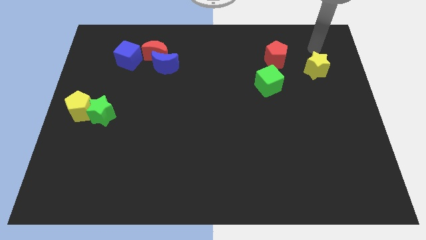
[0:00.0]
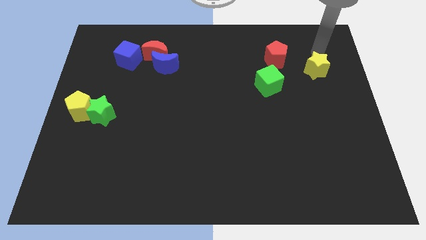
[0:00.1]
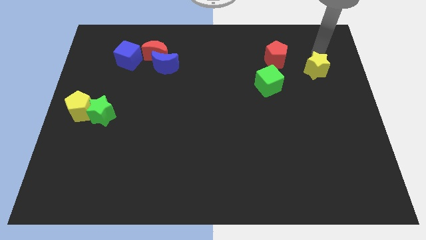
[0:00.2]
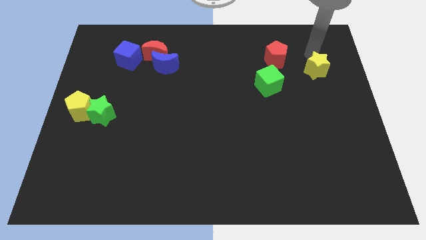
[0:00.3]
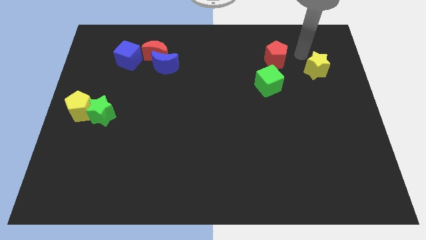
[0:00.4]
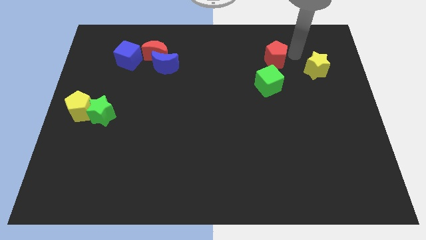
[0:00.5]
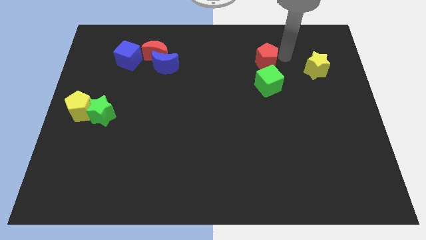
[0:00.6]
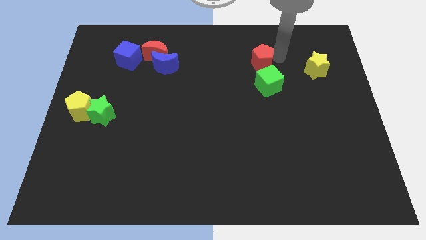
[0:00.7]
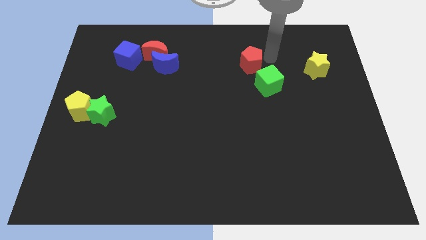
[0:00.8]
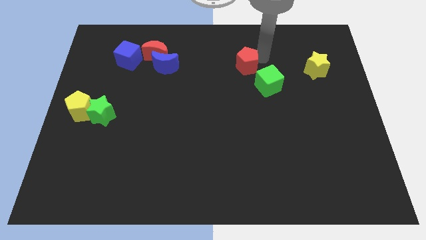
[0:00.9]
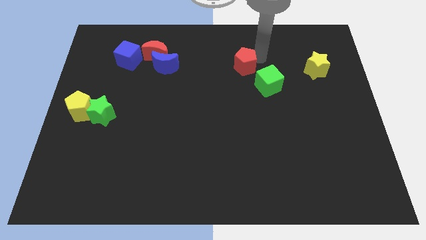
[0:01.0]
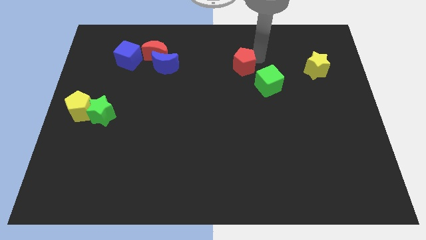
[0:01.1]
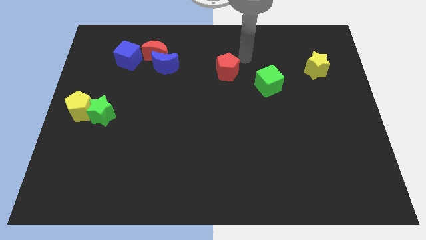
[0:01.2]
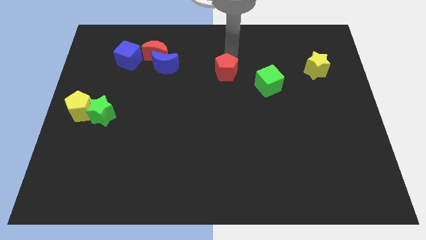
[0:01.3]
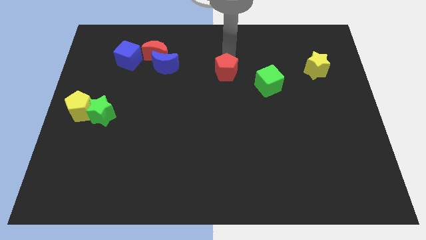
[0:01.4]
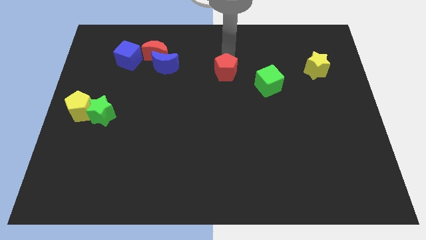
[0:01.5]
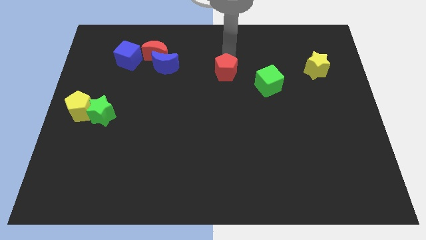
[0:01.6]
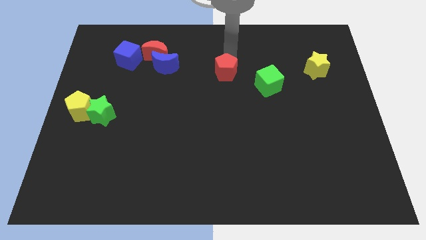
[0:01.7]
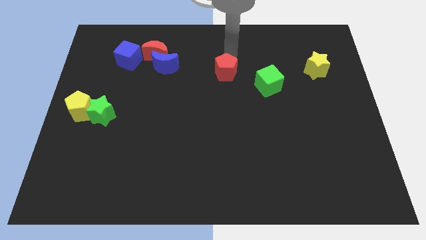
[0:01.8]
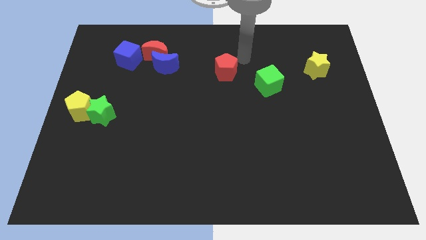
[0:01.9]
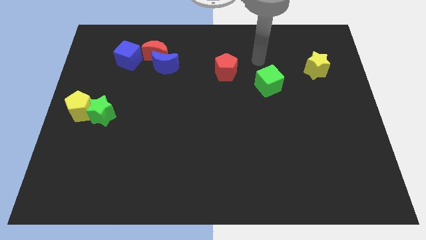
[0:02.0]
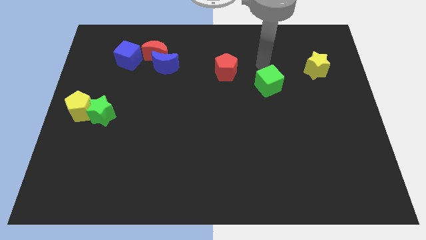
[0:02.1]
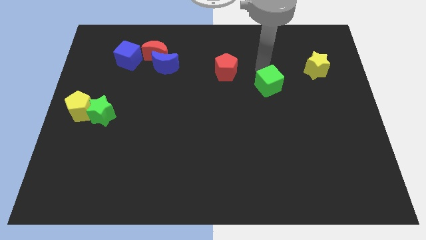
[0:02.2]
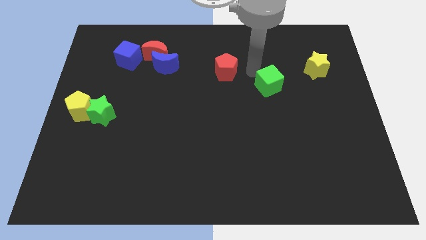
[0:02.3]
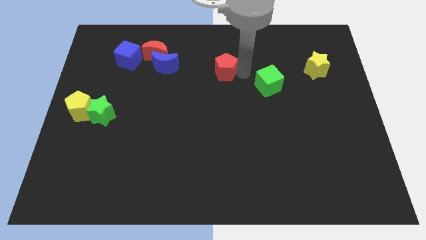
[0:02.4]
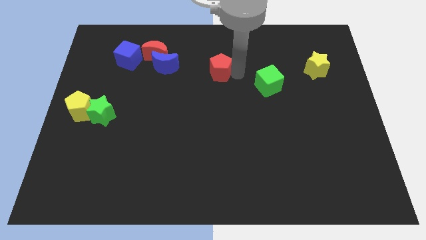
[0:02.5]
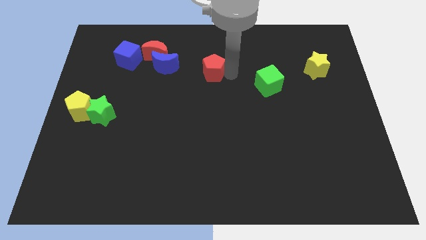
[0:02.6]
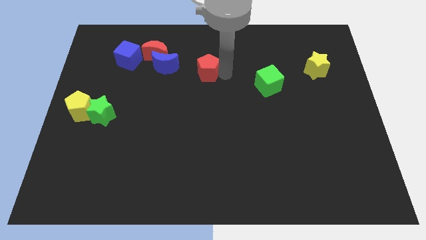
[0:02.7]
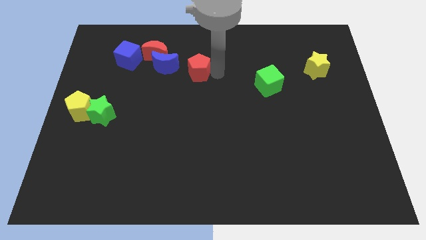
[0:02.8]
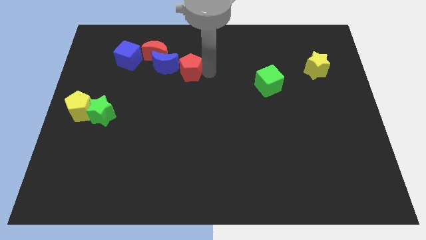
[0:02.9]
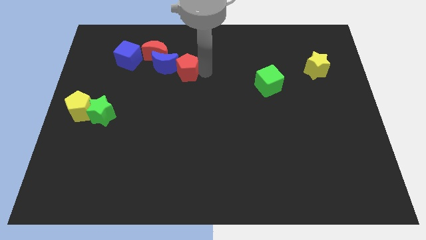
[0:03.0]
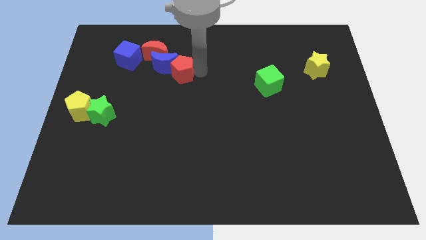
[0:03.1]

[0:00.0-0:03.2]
move red pentagon towards blue crescent

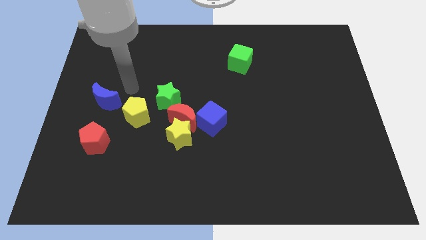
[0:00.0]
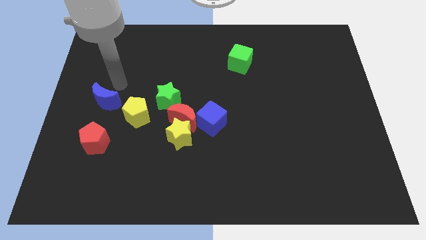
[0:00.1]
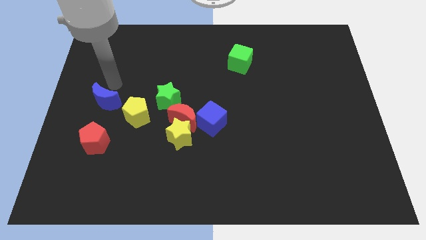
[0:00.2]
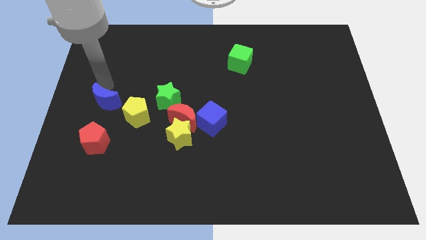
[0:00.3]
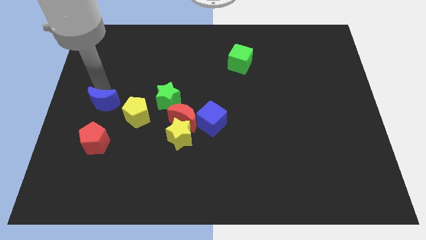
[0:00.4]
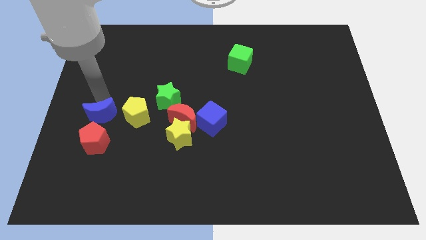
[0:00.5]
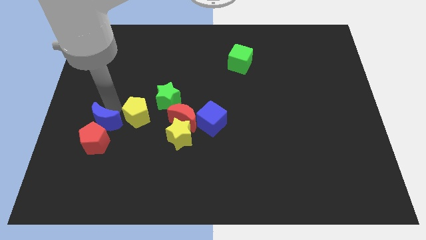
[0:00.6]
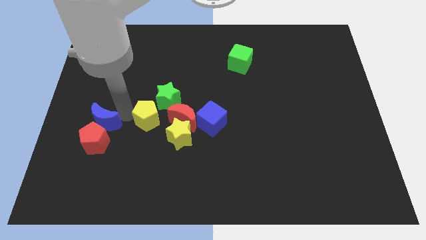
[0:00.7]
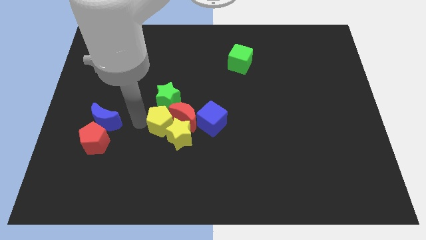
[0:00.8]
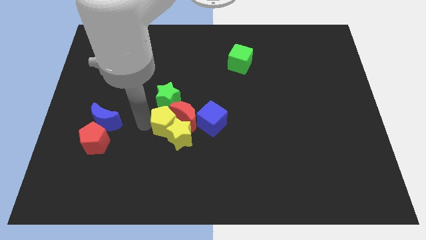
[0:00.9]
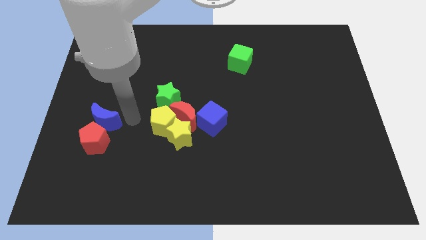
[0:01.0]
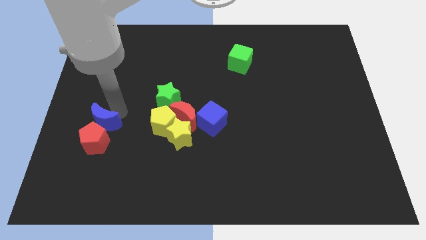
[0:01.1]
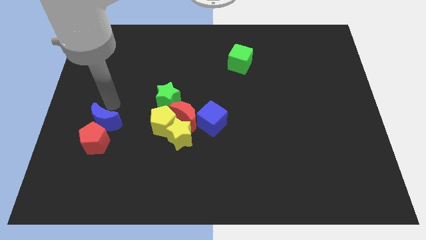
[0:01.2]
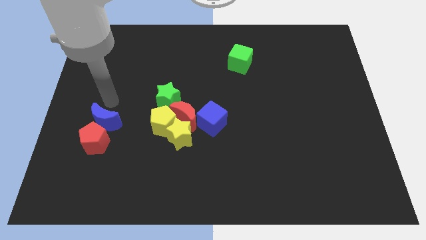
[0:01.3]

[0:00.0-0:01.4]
push the yellow pentagon into the yellow star

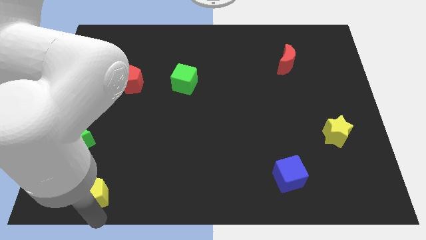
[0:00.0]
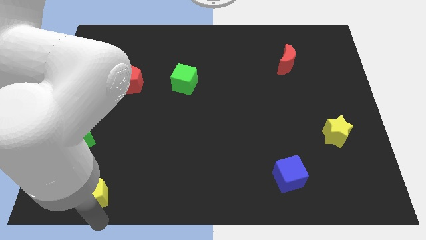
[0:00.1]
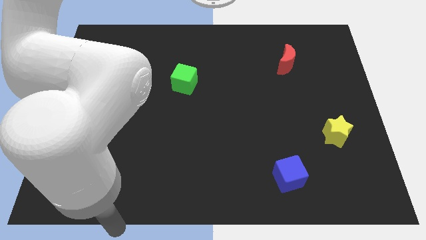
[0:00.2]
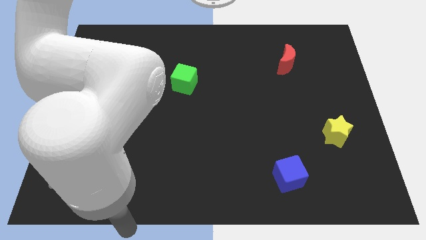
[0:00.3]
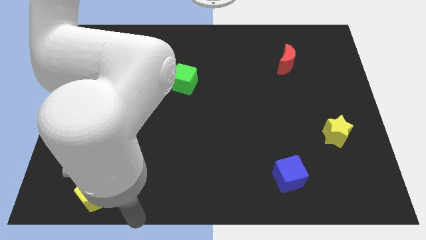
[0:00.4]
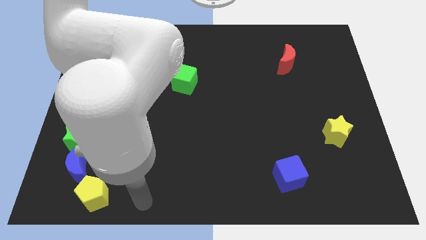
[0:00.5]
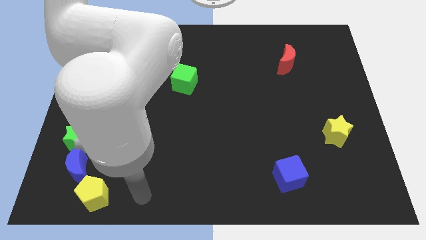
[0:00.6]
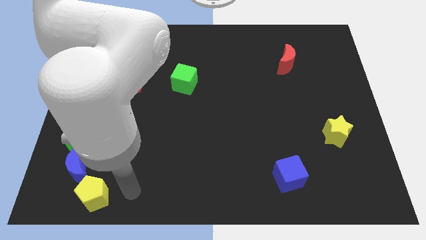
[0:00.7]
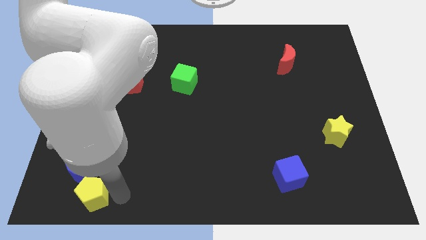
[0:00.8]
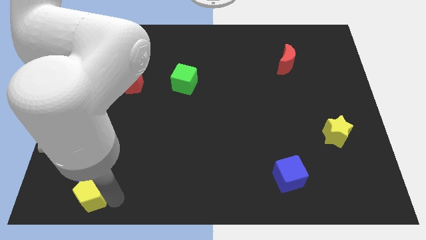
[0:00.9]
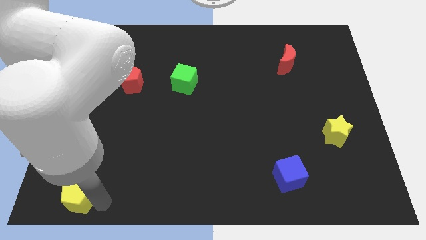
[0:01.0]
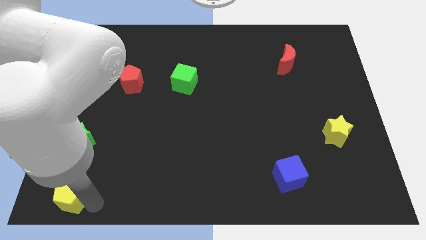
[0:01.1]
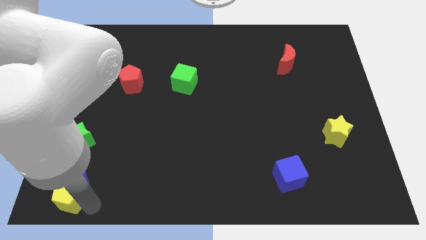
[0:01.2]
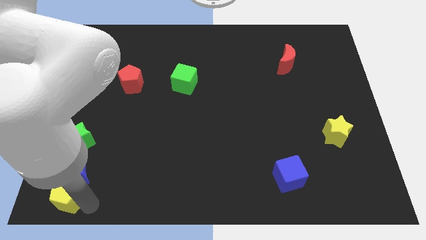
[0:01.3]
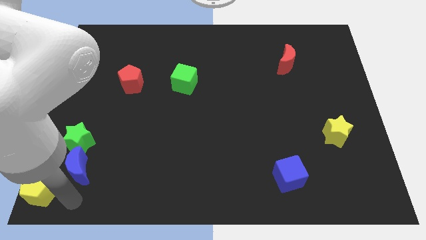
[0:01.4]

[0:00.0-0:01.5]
move the yellow pentagon below the blue crescent

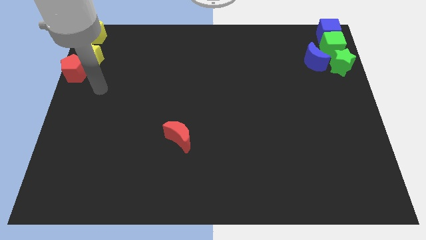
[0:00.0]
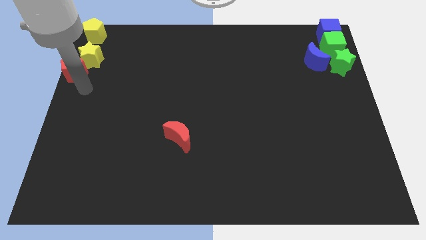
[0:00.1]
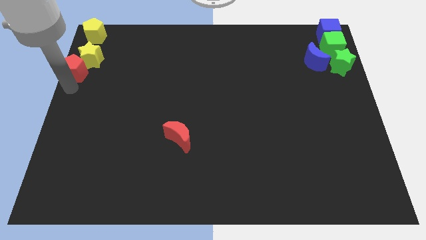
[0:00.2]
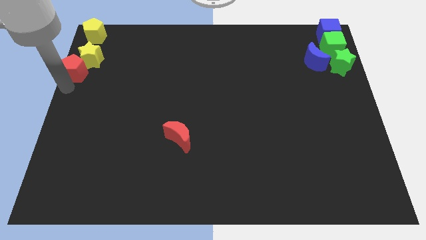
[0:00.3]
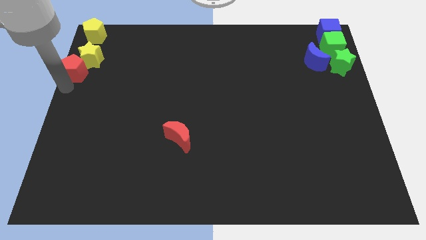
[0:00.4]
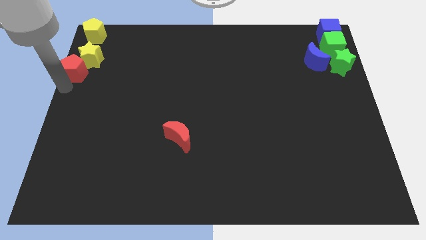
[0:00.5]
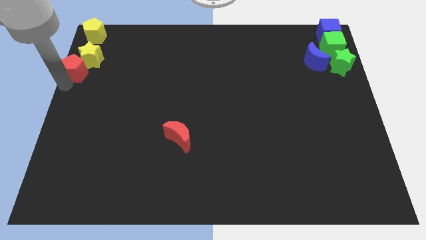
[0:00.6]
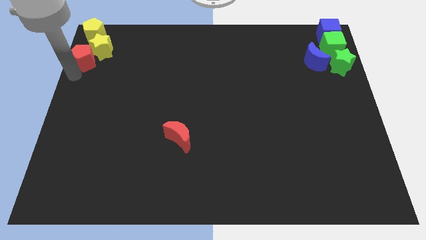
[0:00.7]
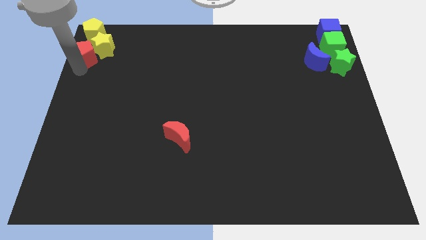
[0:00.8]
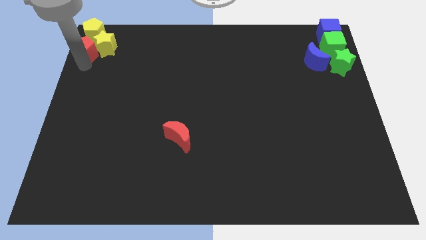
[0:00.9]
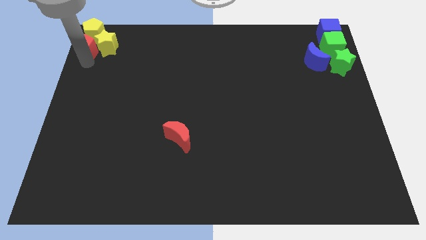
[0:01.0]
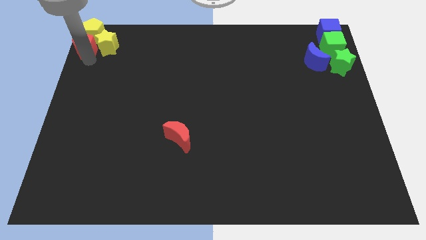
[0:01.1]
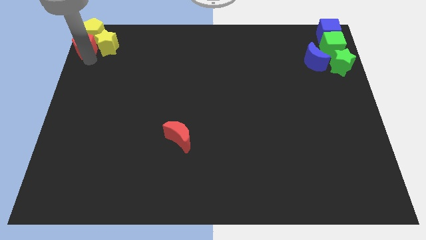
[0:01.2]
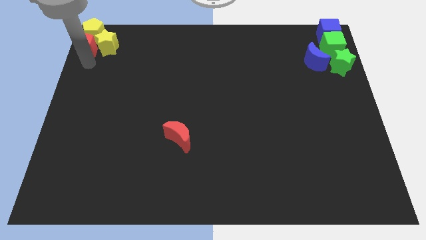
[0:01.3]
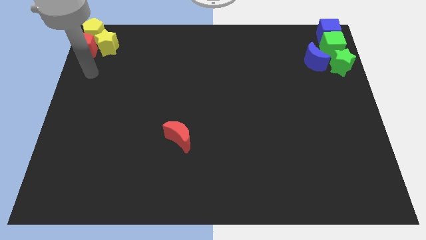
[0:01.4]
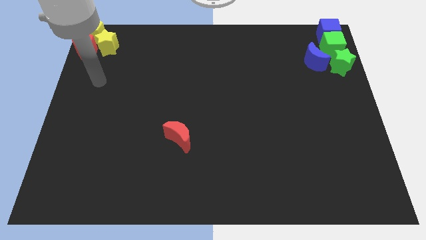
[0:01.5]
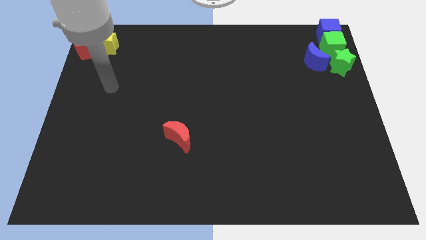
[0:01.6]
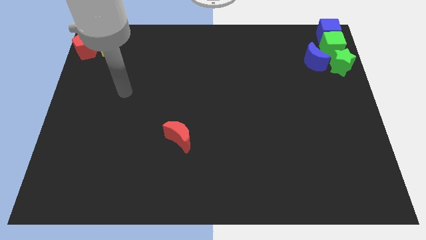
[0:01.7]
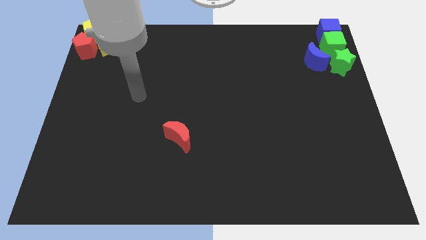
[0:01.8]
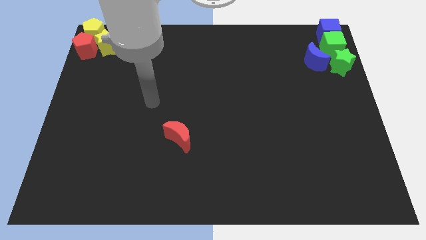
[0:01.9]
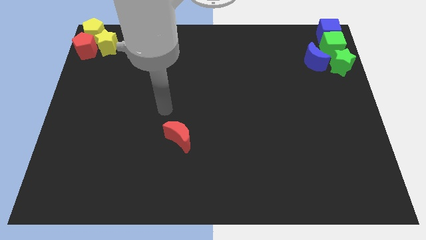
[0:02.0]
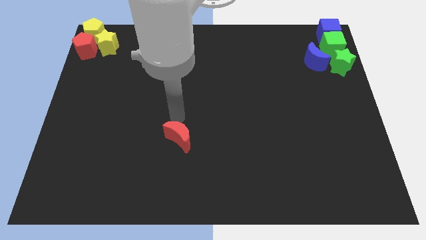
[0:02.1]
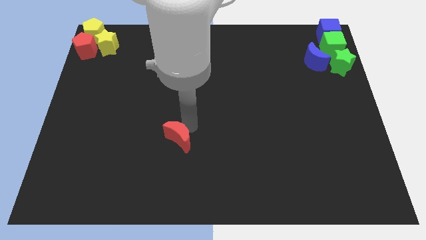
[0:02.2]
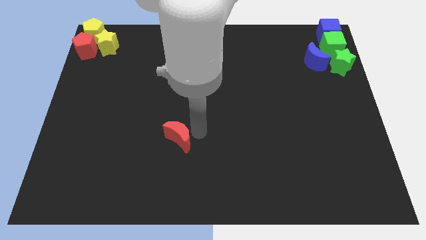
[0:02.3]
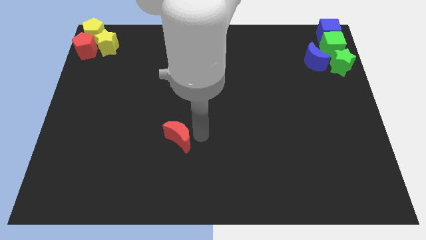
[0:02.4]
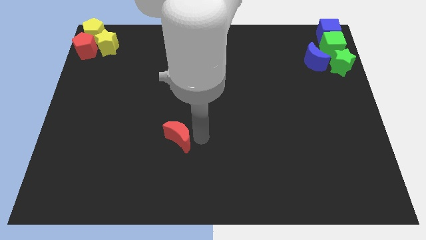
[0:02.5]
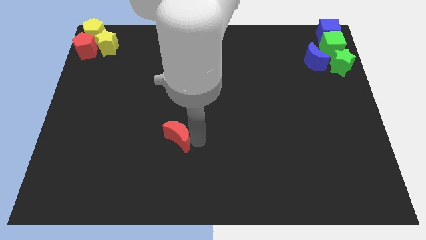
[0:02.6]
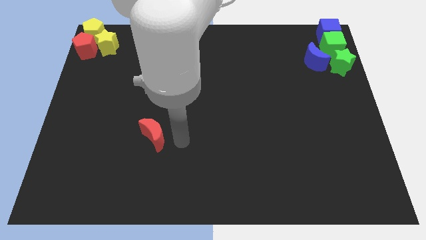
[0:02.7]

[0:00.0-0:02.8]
push the red pentagon and yellow star to the bottom of yellow pentagon

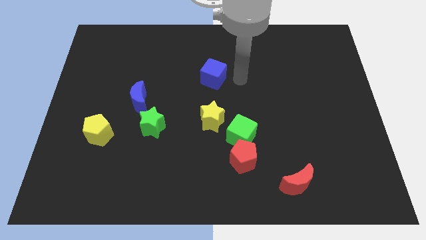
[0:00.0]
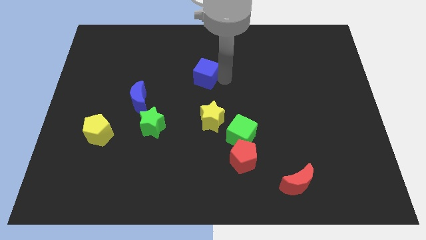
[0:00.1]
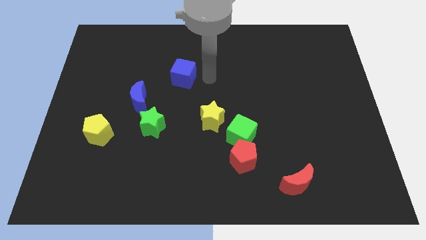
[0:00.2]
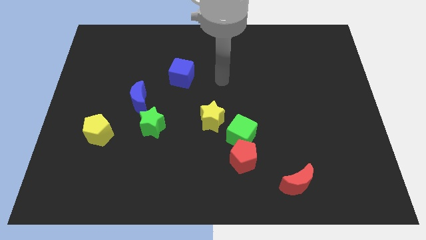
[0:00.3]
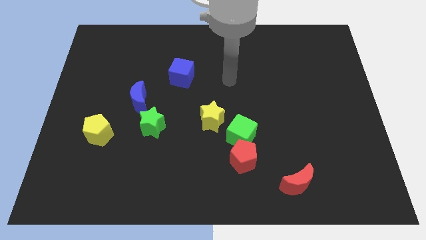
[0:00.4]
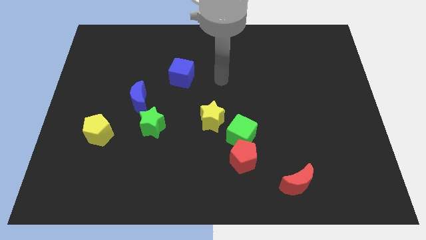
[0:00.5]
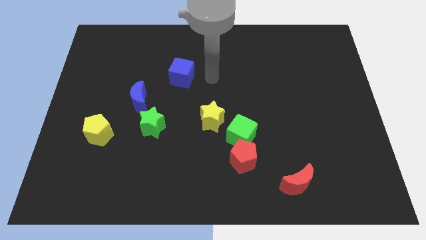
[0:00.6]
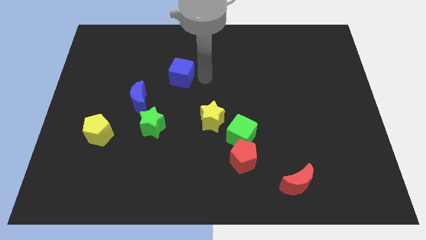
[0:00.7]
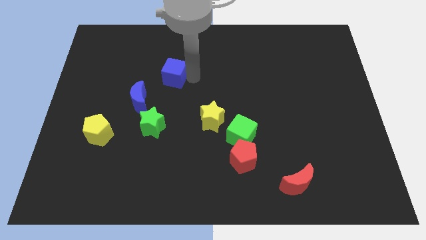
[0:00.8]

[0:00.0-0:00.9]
place the blue cube diagonally to the top right of the green star
